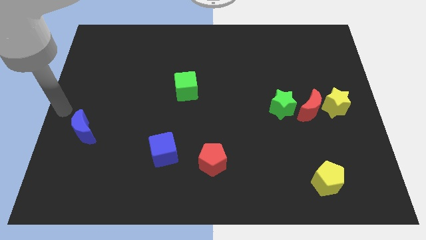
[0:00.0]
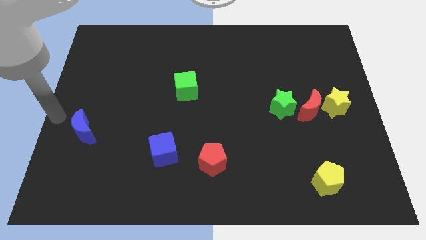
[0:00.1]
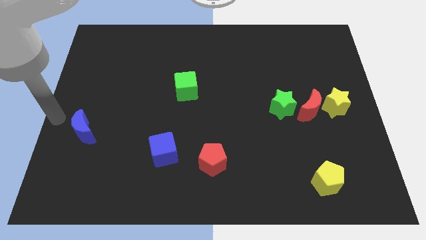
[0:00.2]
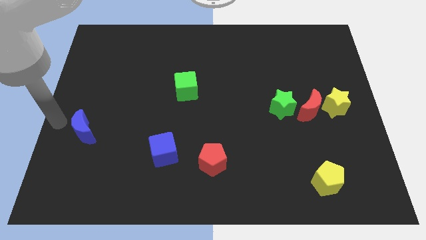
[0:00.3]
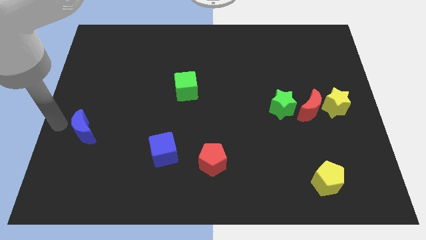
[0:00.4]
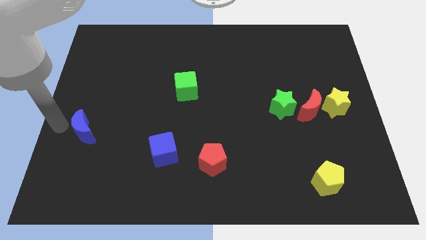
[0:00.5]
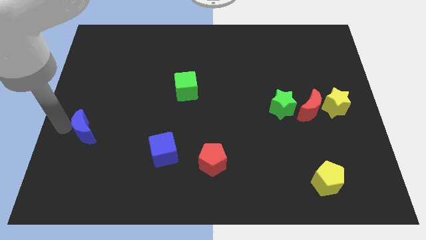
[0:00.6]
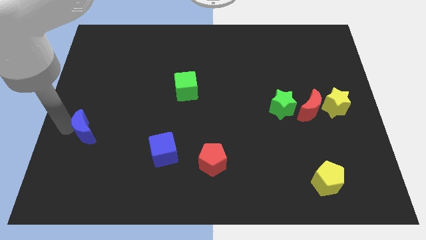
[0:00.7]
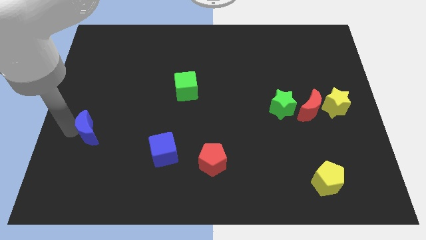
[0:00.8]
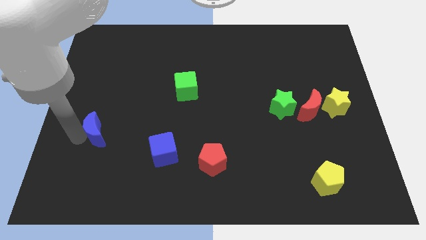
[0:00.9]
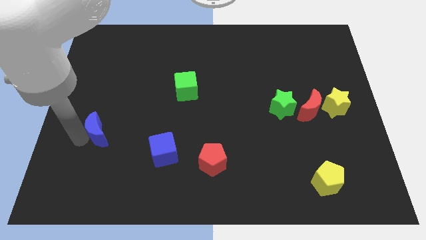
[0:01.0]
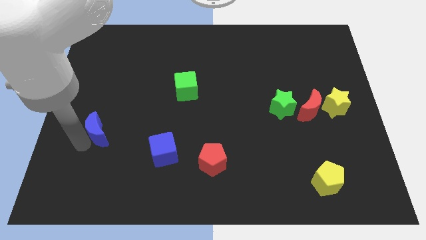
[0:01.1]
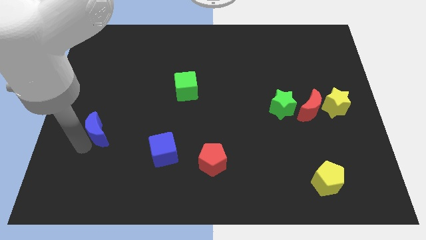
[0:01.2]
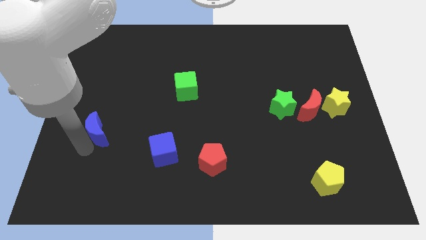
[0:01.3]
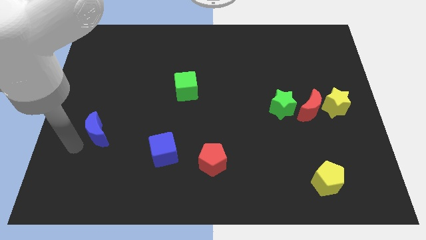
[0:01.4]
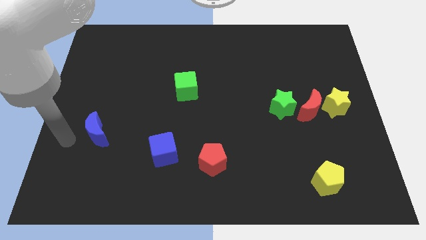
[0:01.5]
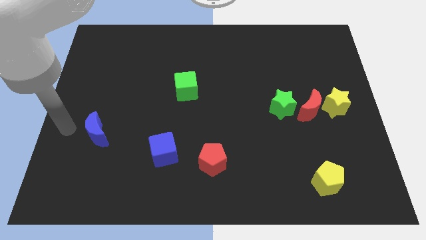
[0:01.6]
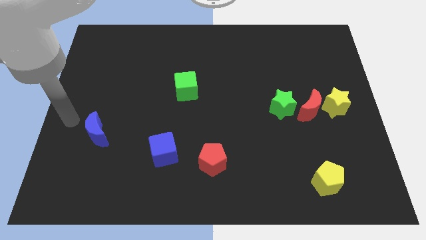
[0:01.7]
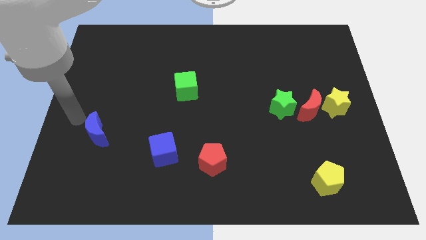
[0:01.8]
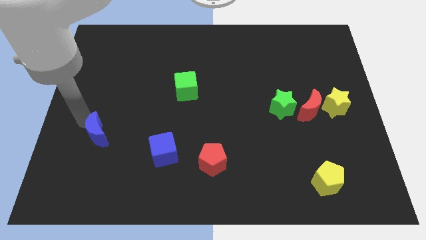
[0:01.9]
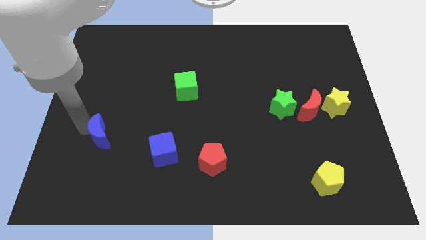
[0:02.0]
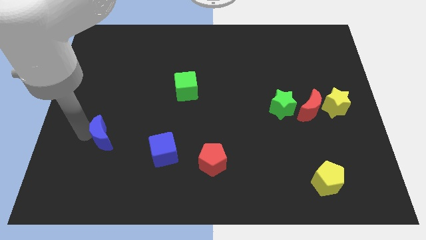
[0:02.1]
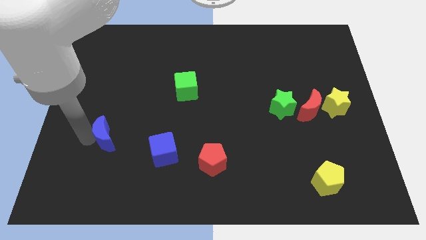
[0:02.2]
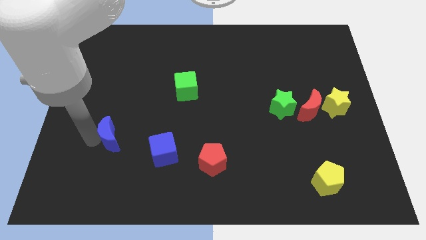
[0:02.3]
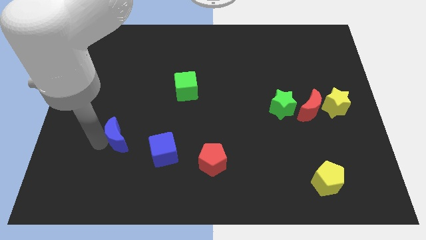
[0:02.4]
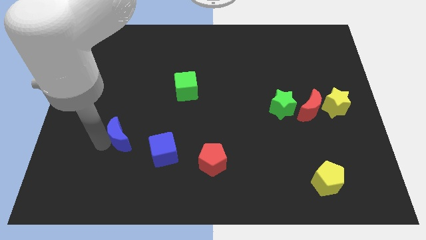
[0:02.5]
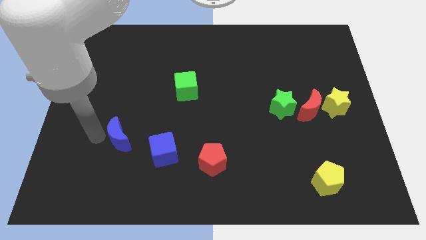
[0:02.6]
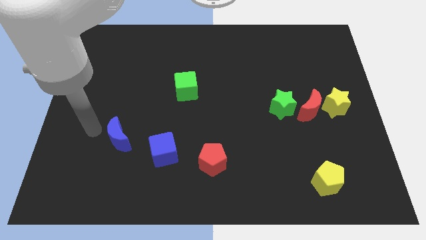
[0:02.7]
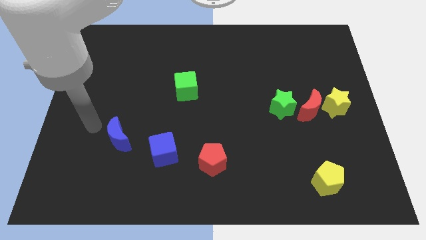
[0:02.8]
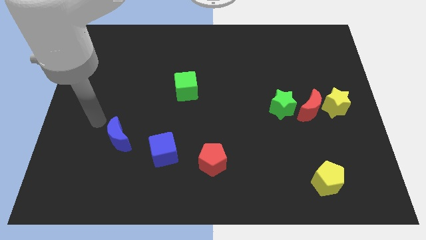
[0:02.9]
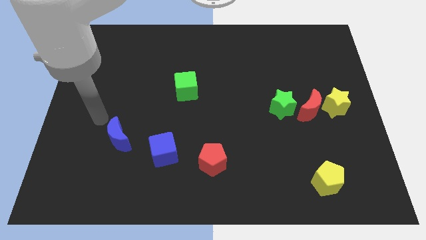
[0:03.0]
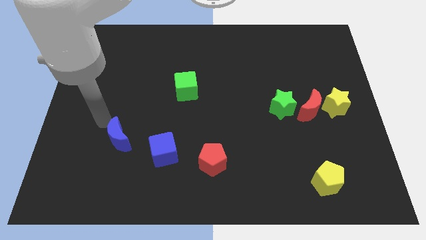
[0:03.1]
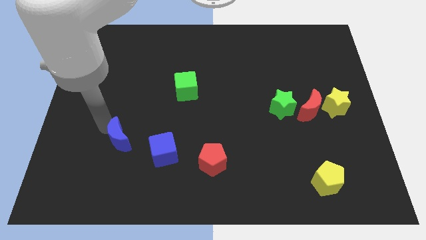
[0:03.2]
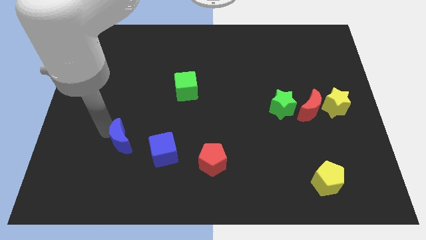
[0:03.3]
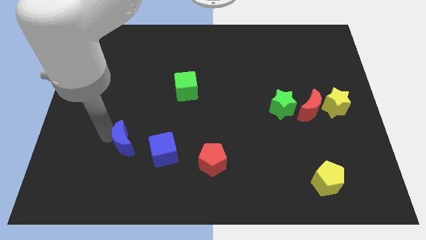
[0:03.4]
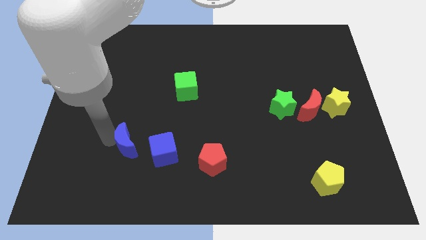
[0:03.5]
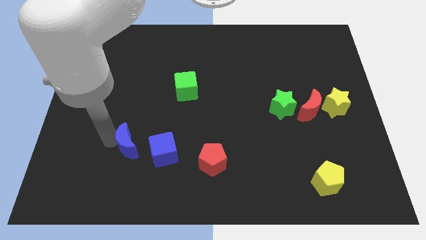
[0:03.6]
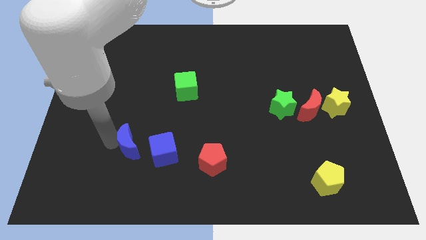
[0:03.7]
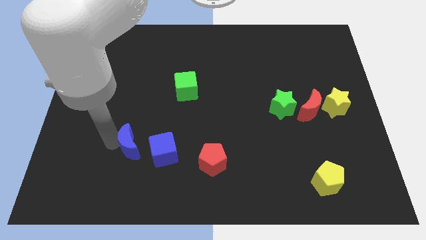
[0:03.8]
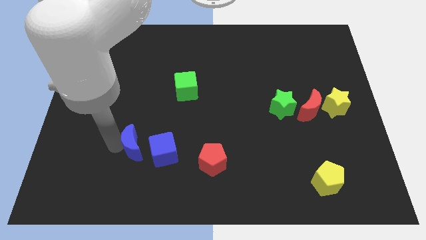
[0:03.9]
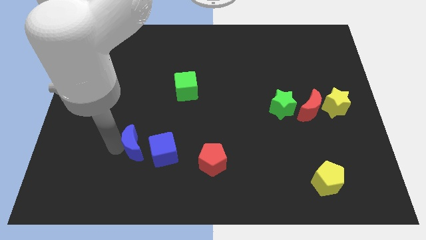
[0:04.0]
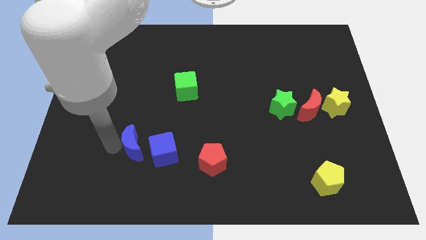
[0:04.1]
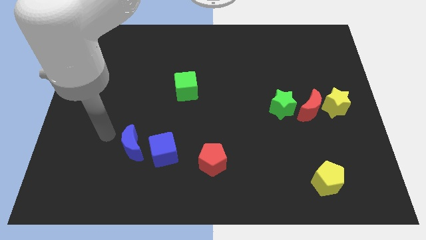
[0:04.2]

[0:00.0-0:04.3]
push the blue crescent left to the bluecube

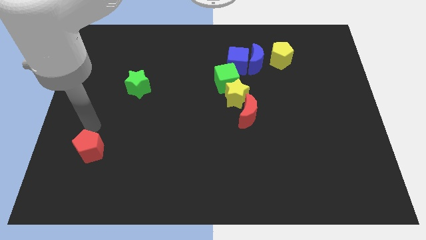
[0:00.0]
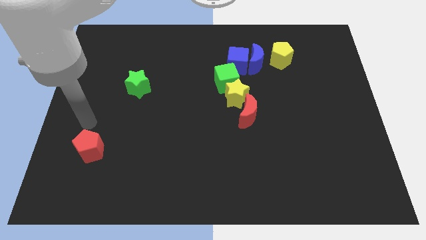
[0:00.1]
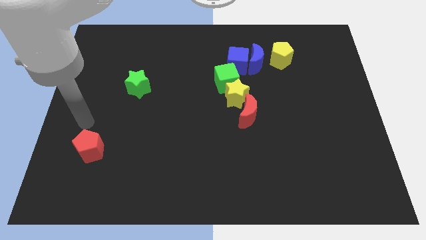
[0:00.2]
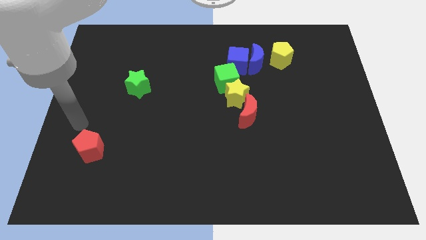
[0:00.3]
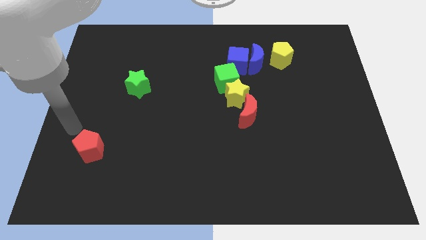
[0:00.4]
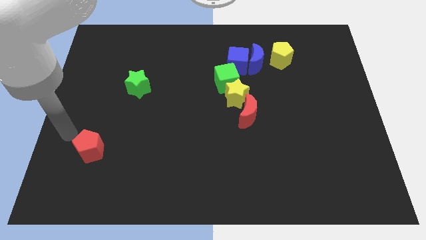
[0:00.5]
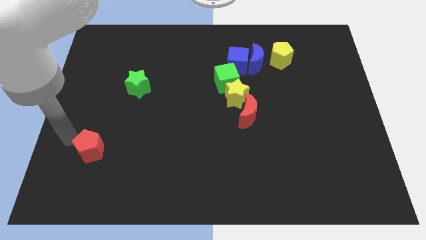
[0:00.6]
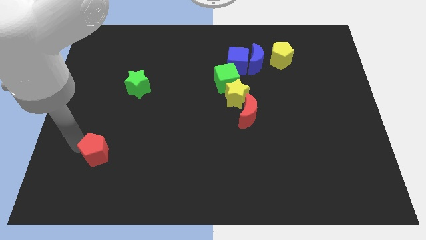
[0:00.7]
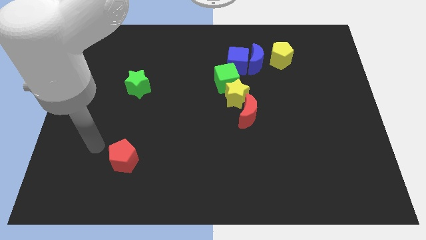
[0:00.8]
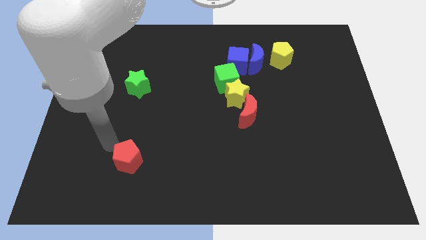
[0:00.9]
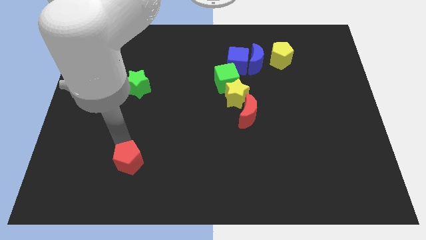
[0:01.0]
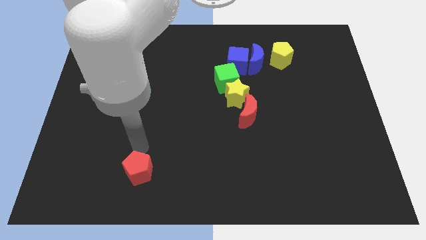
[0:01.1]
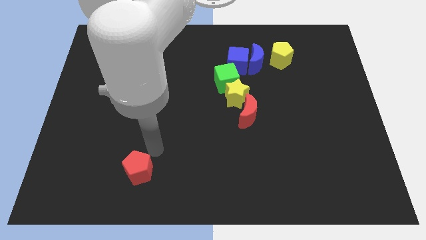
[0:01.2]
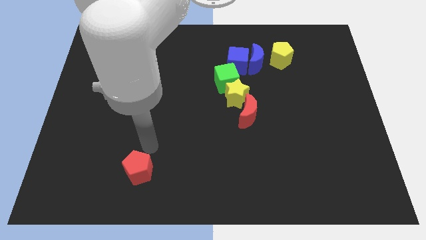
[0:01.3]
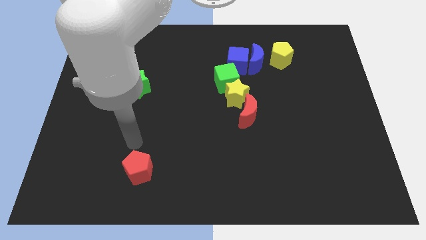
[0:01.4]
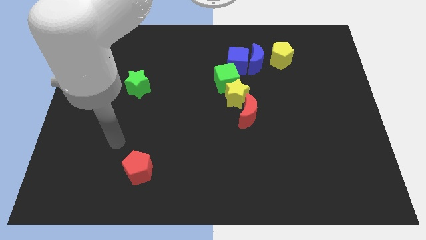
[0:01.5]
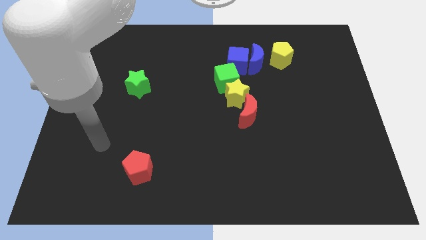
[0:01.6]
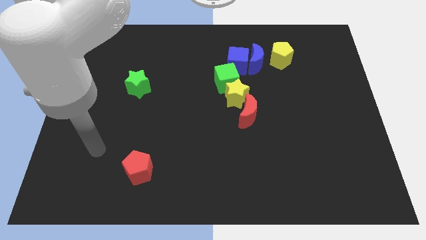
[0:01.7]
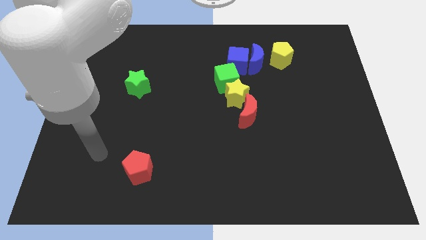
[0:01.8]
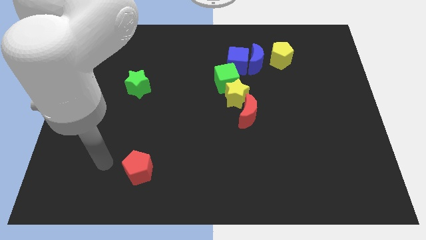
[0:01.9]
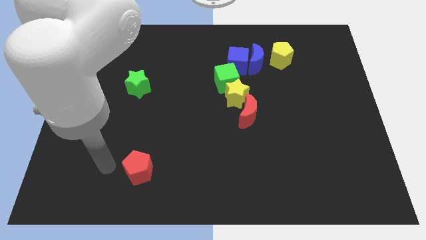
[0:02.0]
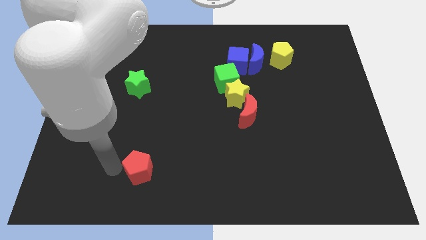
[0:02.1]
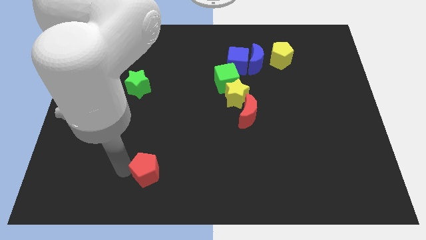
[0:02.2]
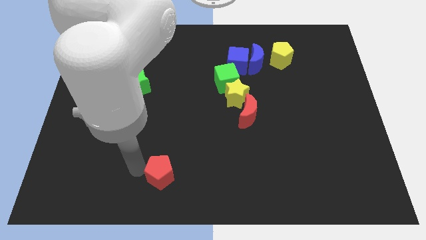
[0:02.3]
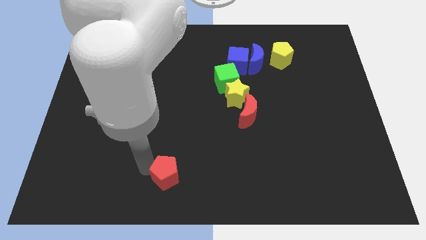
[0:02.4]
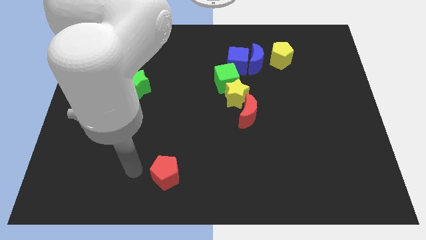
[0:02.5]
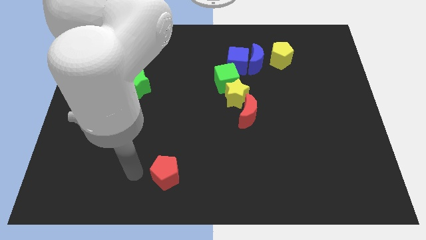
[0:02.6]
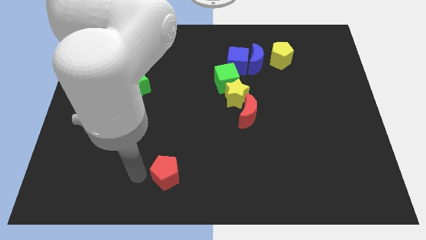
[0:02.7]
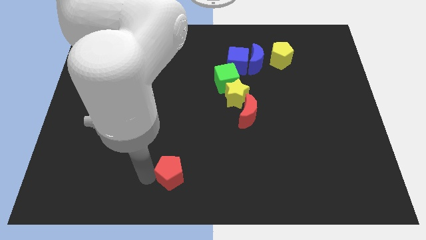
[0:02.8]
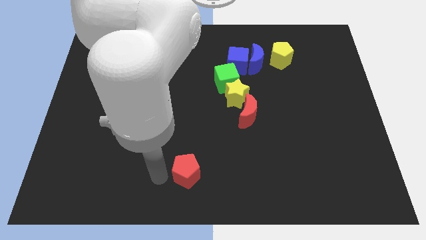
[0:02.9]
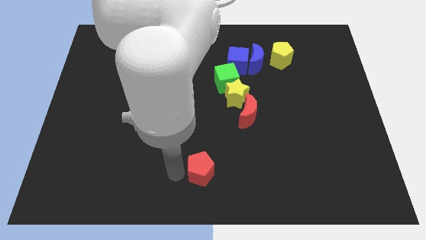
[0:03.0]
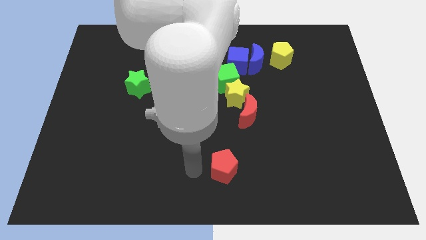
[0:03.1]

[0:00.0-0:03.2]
placed the red pentagon at the bottom center of the board

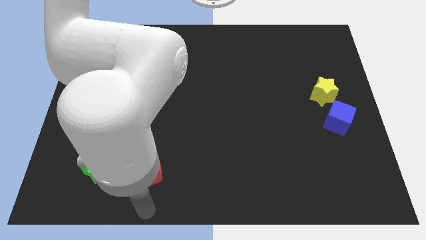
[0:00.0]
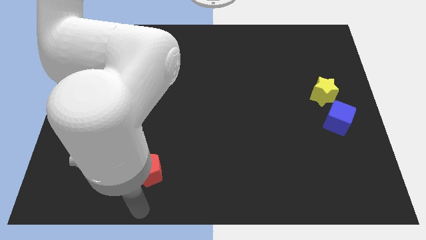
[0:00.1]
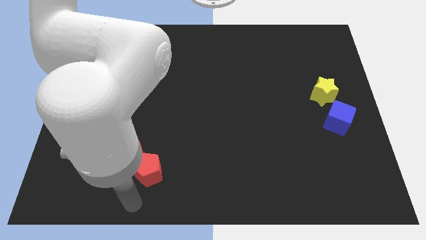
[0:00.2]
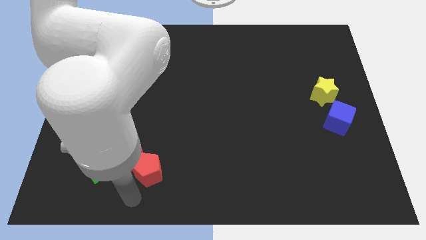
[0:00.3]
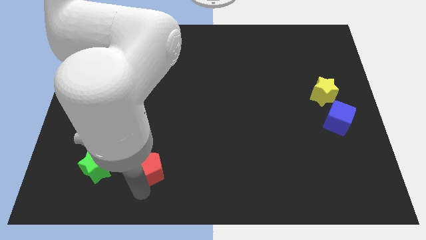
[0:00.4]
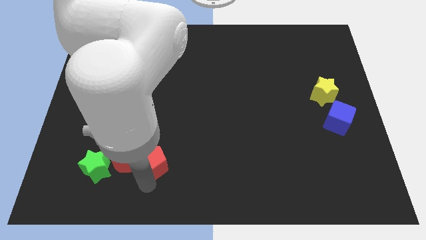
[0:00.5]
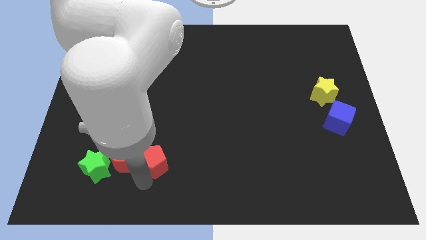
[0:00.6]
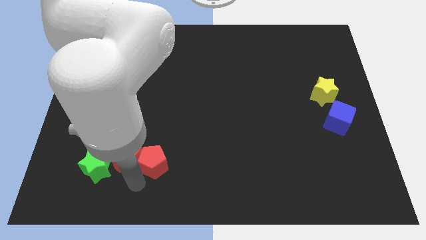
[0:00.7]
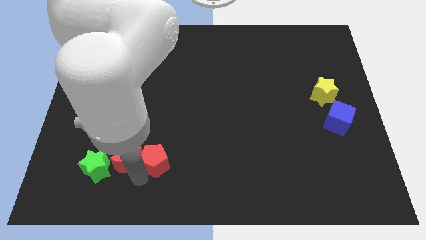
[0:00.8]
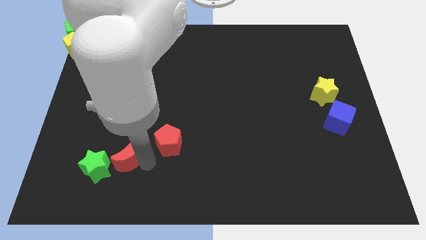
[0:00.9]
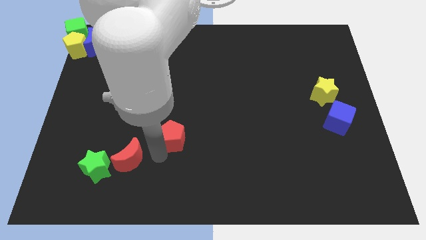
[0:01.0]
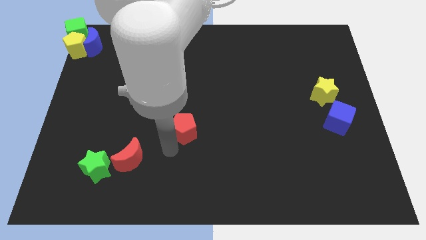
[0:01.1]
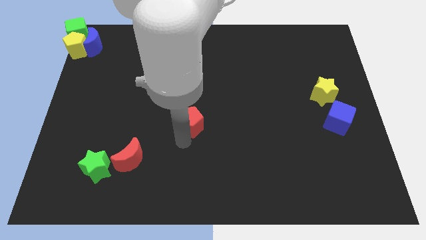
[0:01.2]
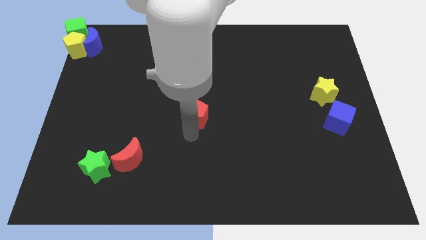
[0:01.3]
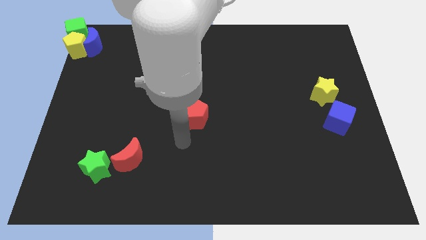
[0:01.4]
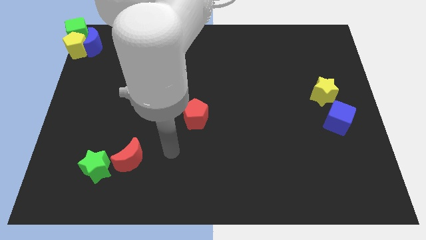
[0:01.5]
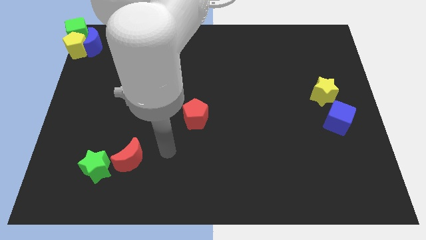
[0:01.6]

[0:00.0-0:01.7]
move the red pentagon away from the red crescent
